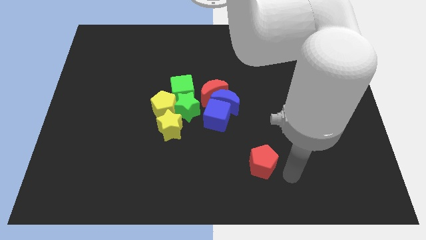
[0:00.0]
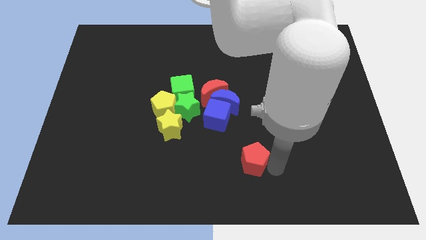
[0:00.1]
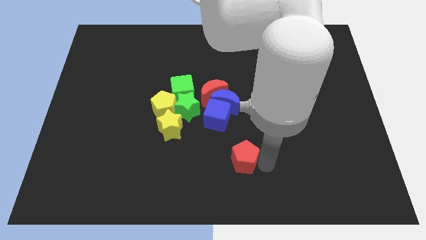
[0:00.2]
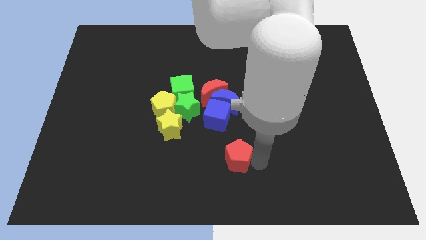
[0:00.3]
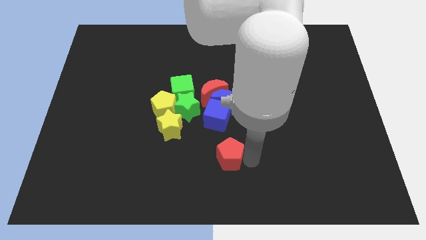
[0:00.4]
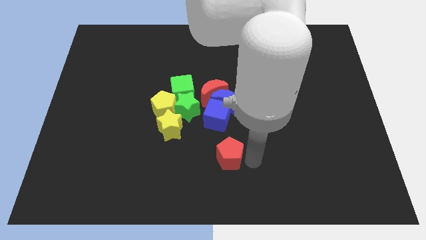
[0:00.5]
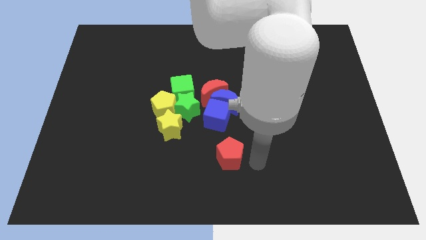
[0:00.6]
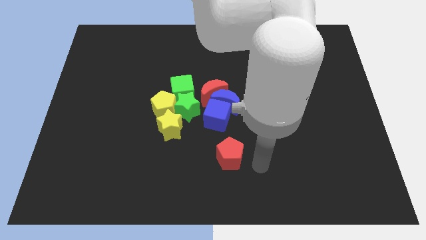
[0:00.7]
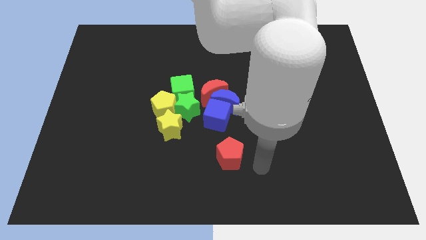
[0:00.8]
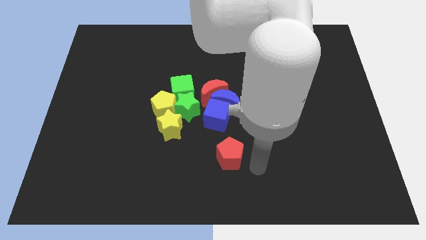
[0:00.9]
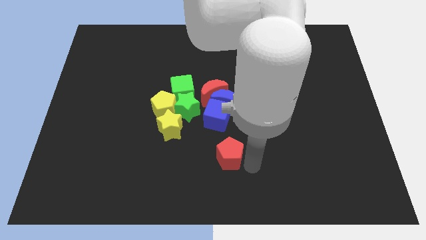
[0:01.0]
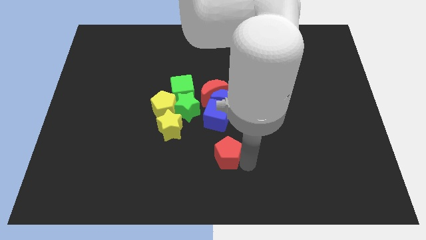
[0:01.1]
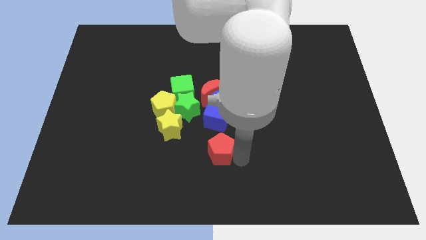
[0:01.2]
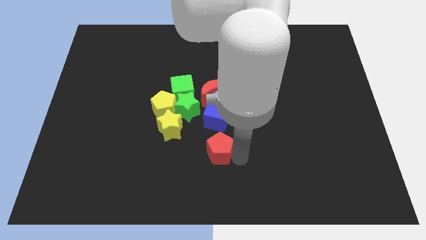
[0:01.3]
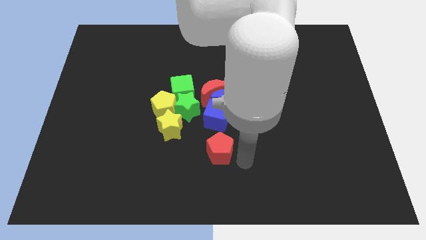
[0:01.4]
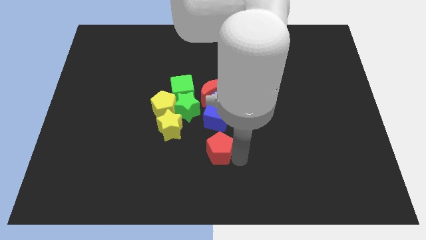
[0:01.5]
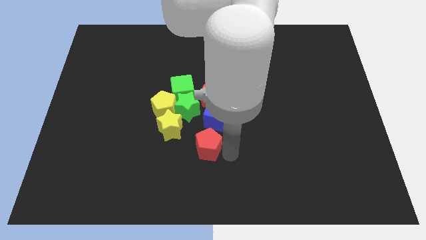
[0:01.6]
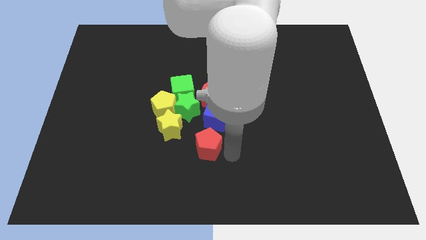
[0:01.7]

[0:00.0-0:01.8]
move the red pentagon to the bottom of the blue cube

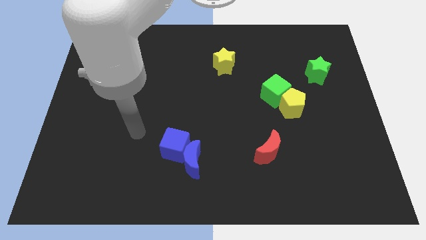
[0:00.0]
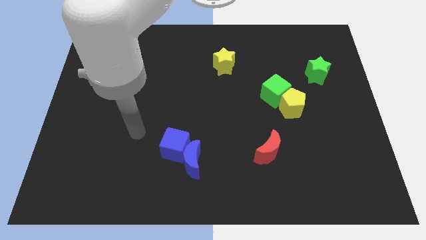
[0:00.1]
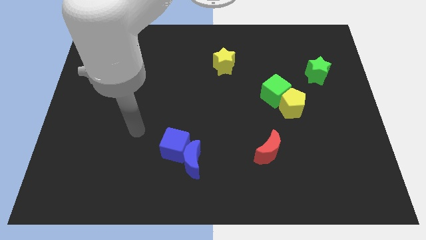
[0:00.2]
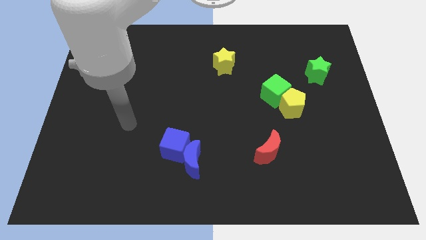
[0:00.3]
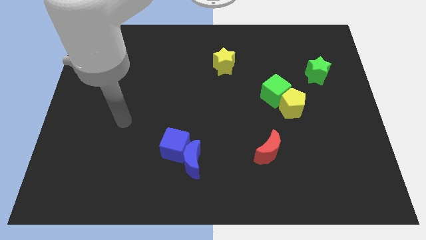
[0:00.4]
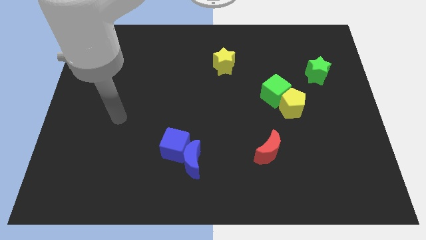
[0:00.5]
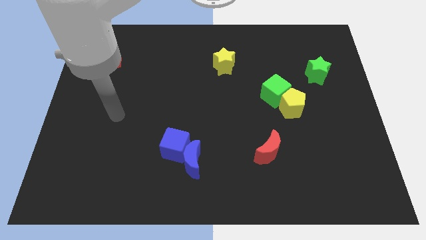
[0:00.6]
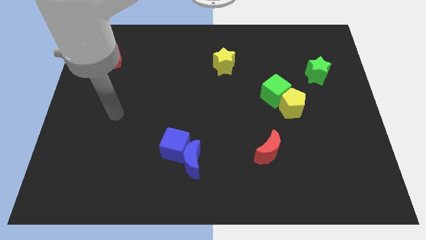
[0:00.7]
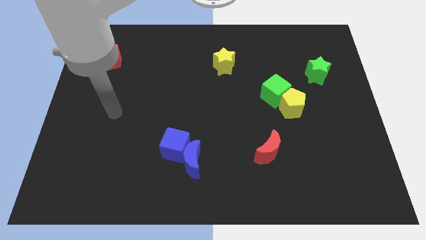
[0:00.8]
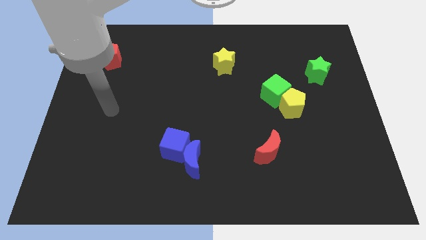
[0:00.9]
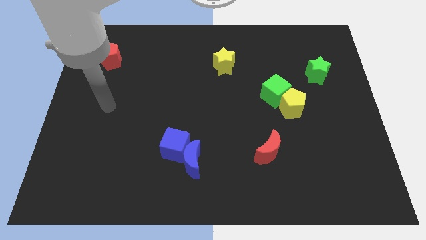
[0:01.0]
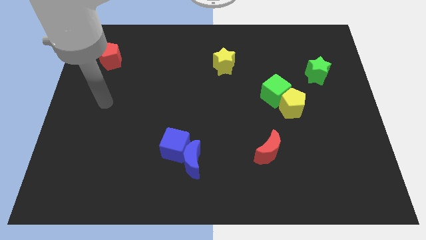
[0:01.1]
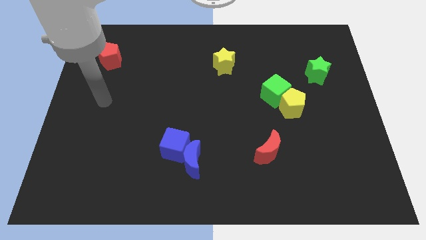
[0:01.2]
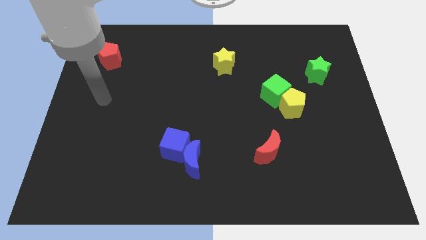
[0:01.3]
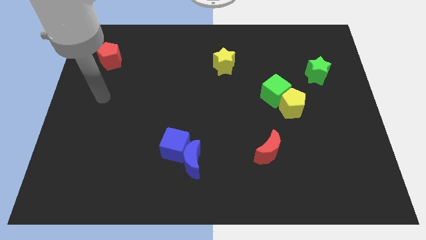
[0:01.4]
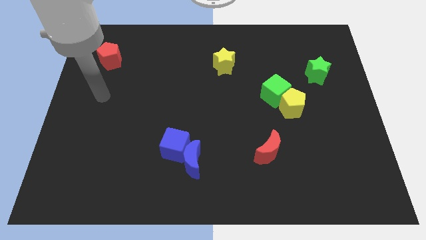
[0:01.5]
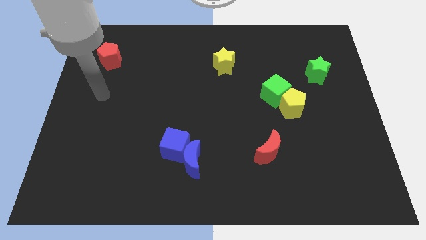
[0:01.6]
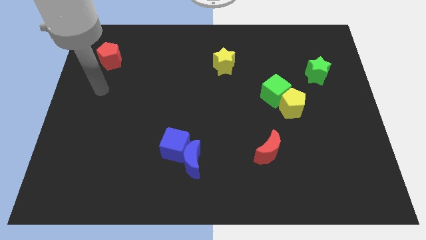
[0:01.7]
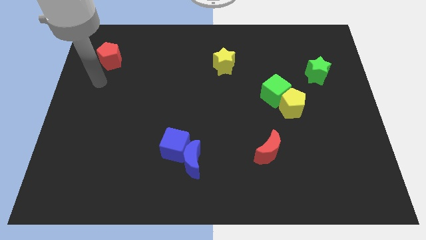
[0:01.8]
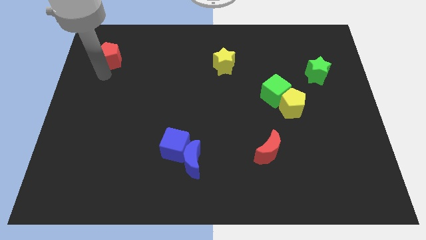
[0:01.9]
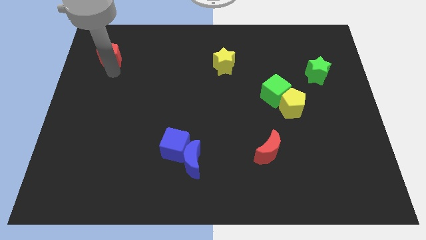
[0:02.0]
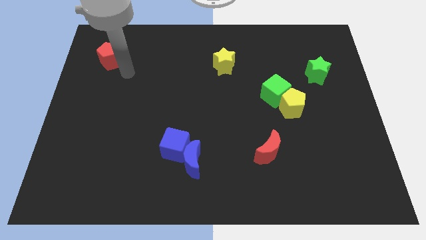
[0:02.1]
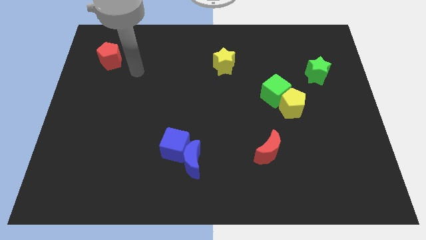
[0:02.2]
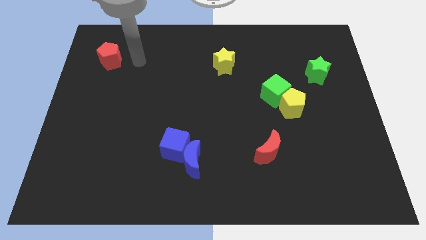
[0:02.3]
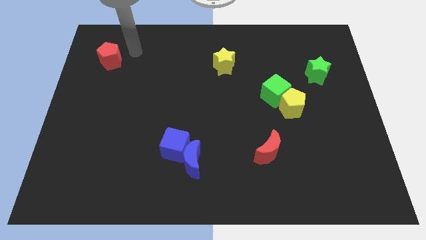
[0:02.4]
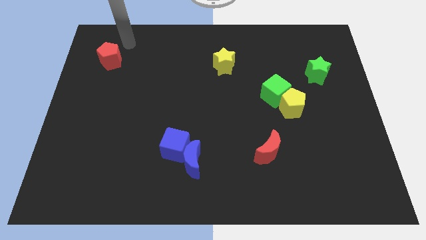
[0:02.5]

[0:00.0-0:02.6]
move the arm right to the red pentagon

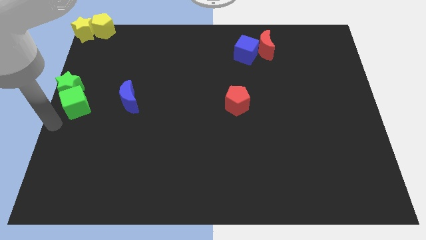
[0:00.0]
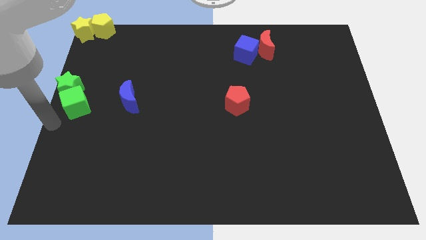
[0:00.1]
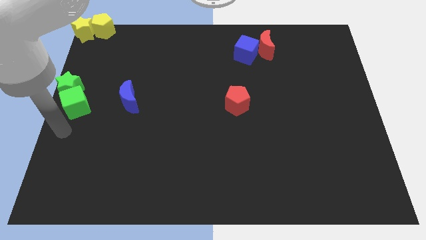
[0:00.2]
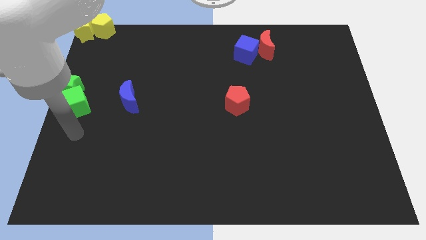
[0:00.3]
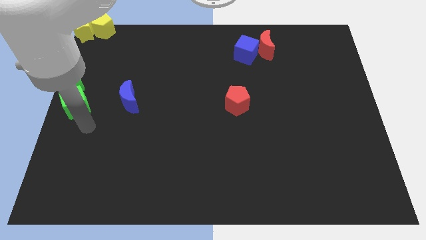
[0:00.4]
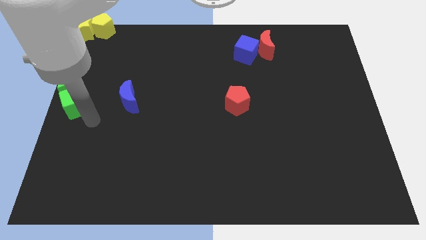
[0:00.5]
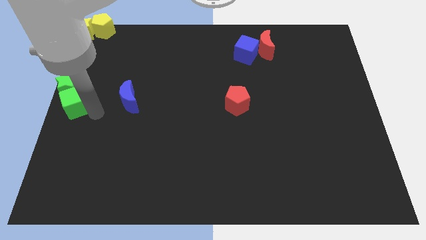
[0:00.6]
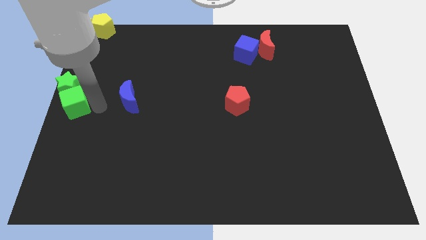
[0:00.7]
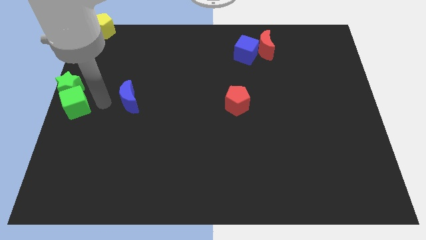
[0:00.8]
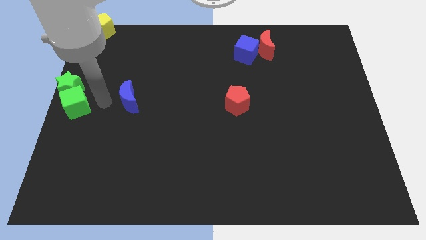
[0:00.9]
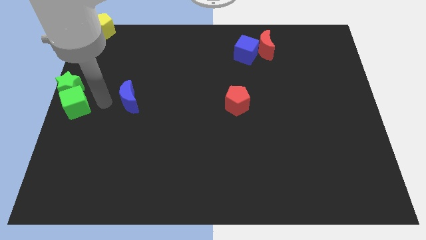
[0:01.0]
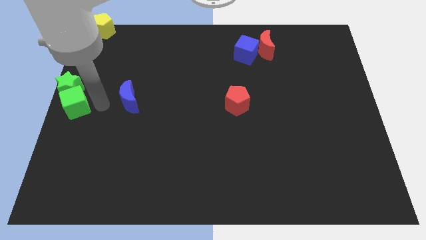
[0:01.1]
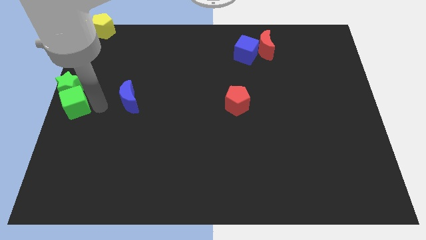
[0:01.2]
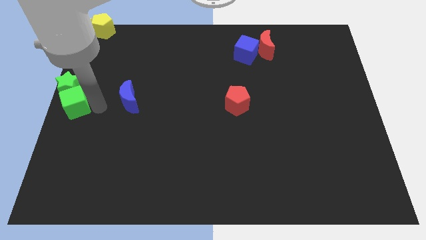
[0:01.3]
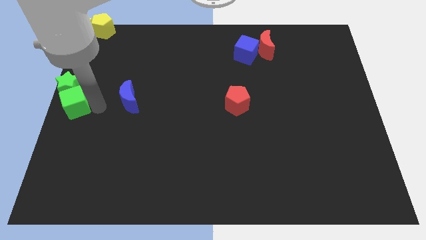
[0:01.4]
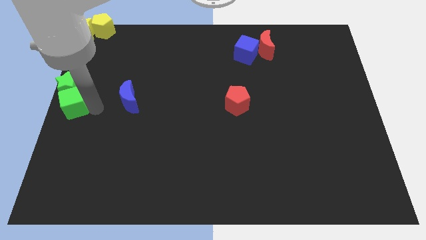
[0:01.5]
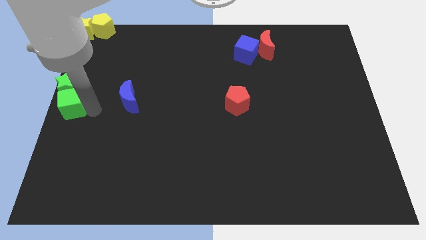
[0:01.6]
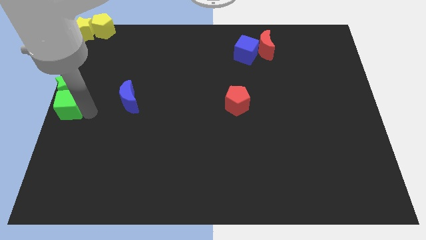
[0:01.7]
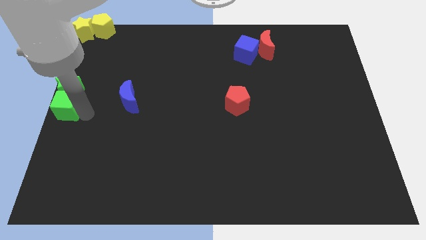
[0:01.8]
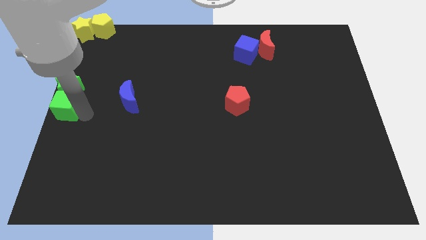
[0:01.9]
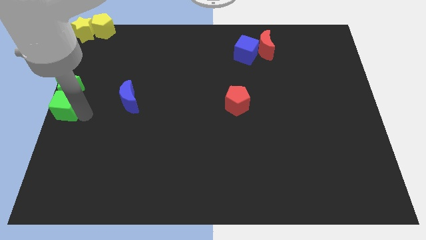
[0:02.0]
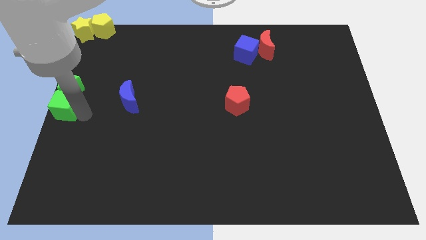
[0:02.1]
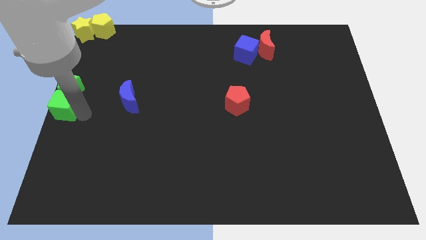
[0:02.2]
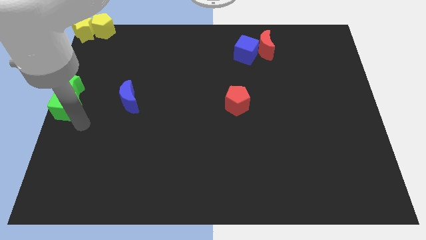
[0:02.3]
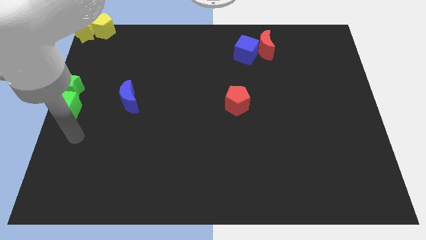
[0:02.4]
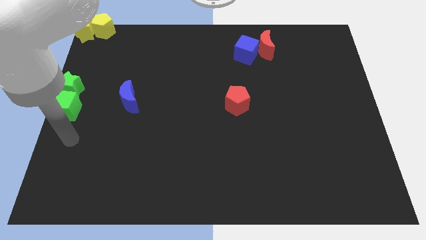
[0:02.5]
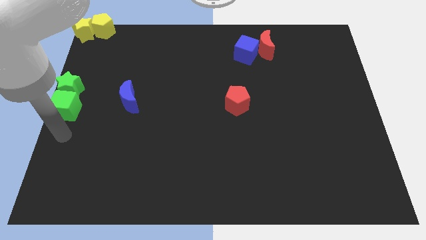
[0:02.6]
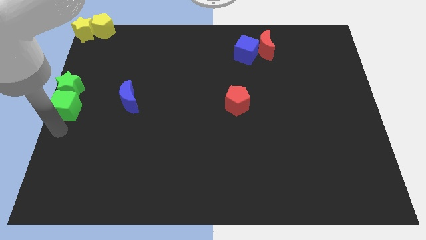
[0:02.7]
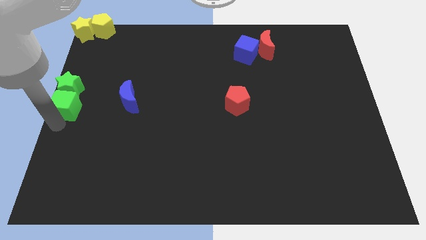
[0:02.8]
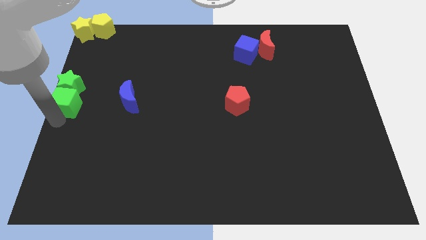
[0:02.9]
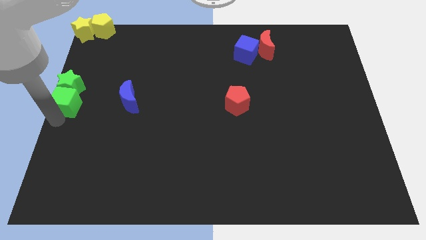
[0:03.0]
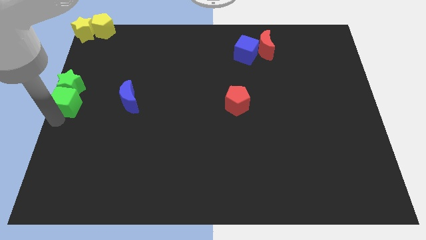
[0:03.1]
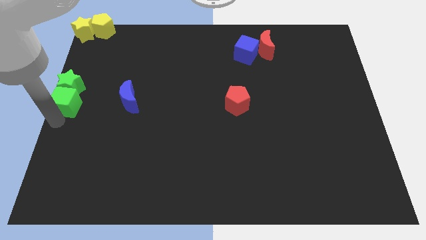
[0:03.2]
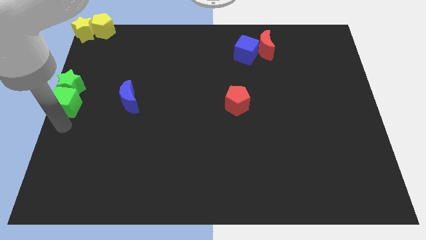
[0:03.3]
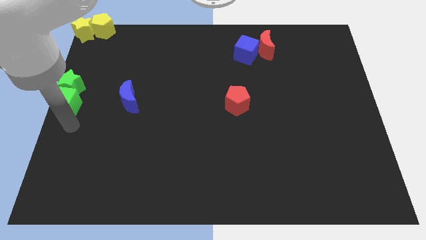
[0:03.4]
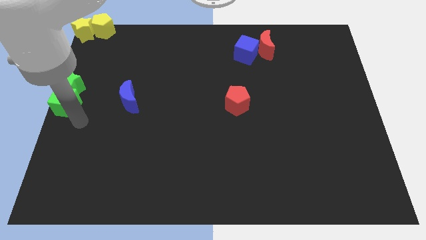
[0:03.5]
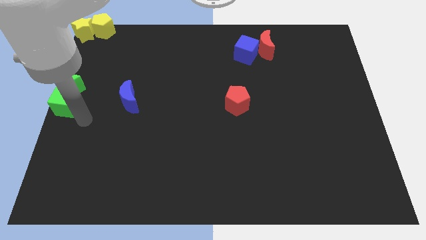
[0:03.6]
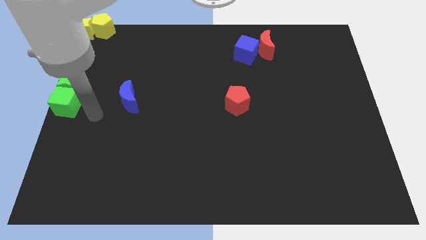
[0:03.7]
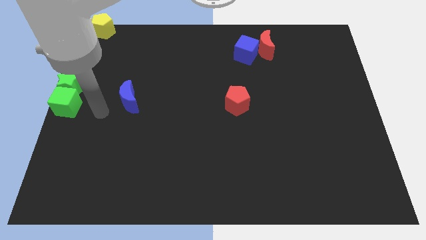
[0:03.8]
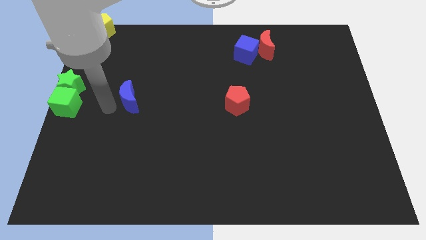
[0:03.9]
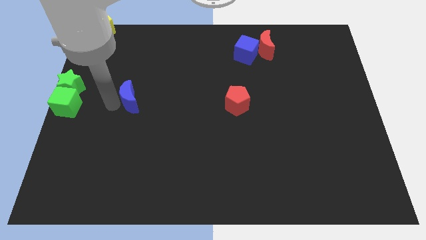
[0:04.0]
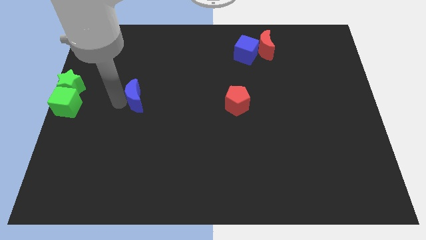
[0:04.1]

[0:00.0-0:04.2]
adjust the green cube at the center left

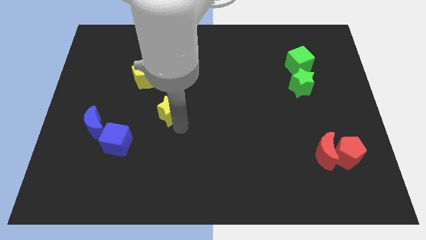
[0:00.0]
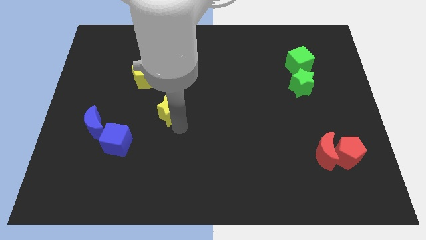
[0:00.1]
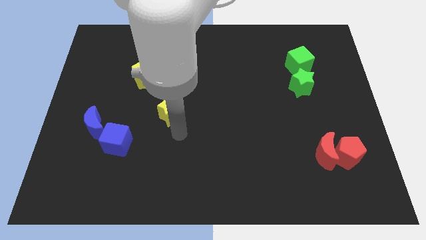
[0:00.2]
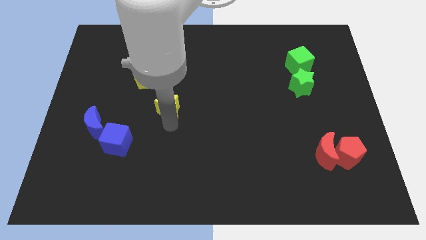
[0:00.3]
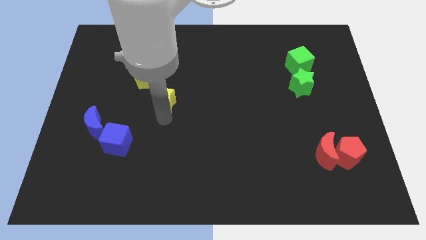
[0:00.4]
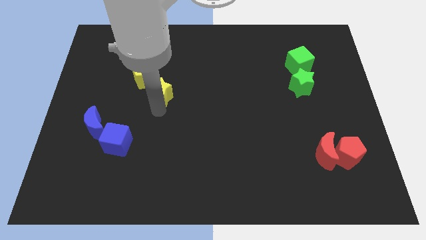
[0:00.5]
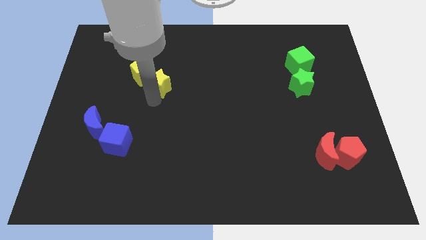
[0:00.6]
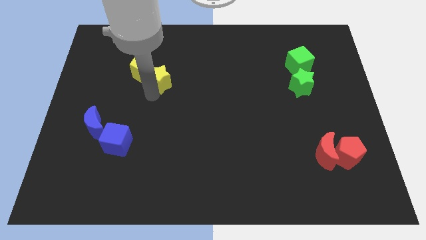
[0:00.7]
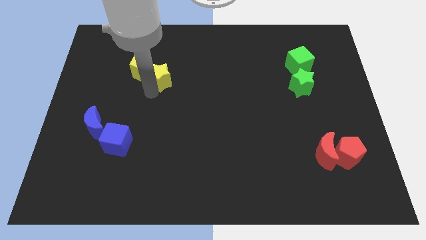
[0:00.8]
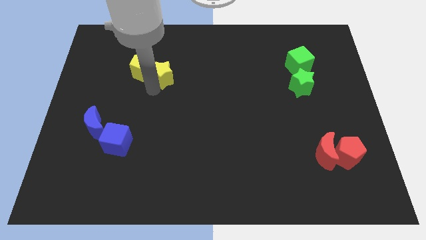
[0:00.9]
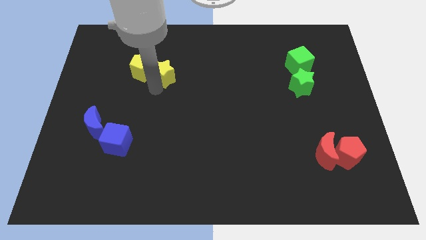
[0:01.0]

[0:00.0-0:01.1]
move yellow star into yellow pentagon
